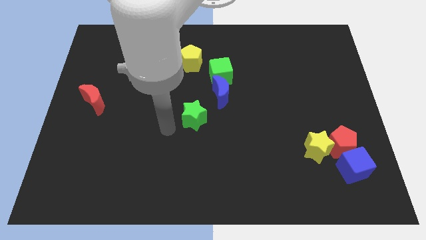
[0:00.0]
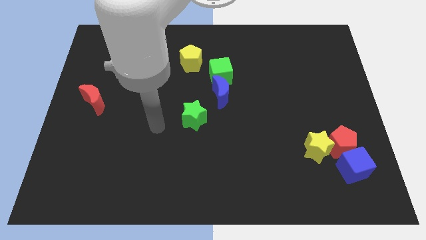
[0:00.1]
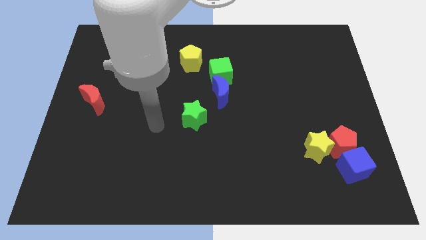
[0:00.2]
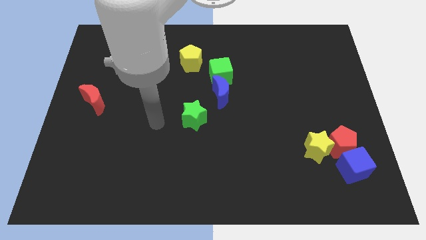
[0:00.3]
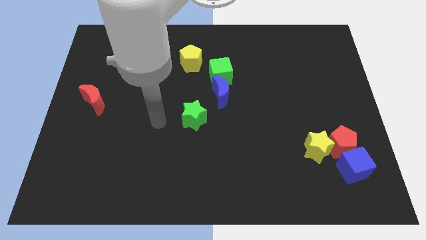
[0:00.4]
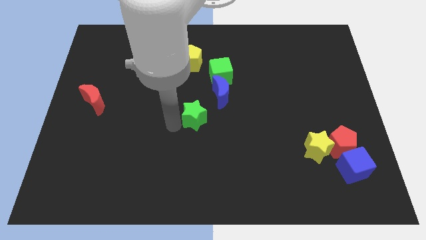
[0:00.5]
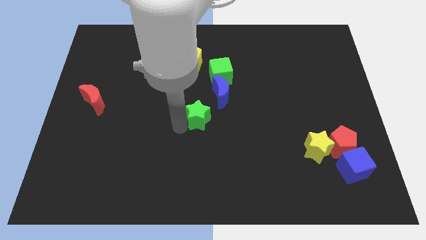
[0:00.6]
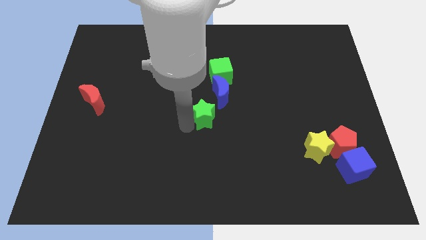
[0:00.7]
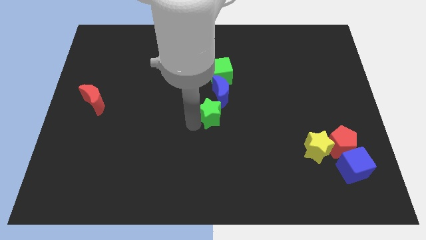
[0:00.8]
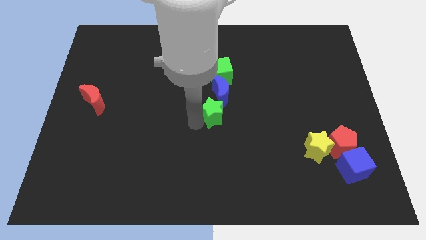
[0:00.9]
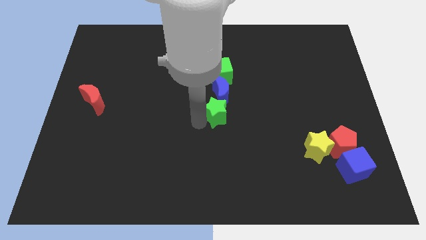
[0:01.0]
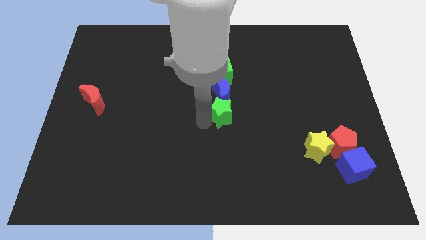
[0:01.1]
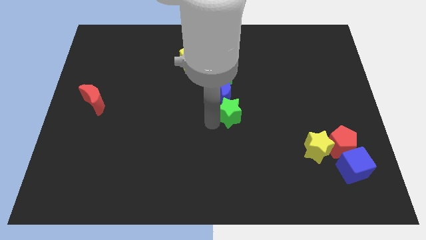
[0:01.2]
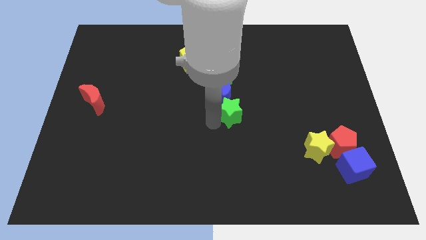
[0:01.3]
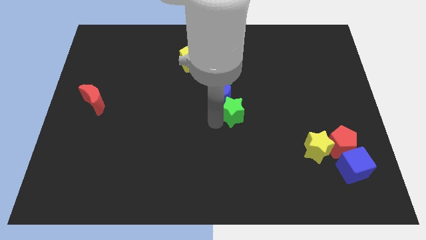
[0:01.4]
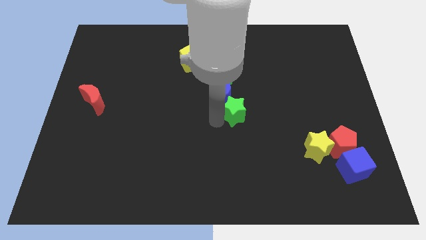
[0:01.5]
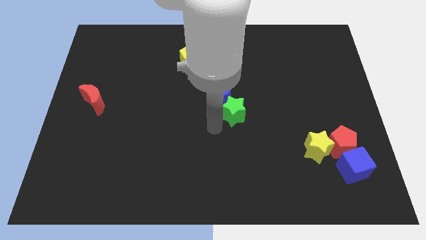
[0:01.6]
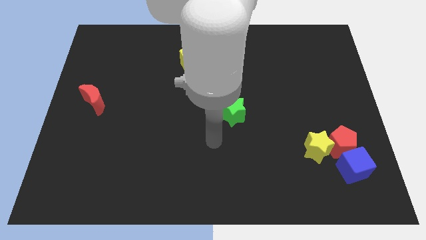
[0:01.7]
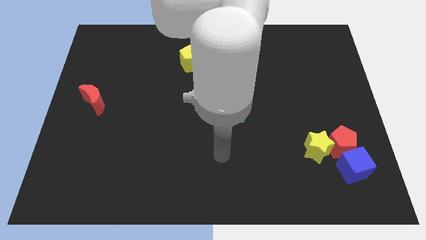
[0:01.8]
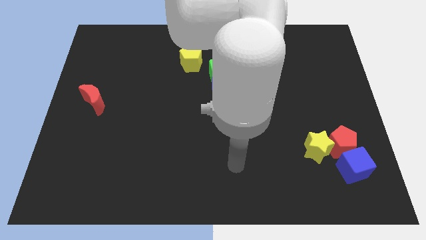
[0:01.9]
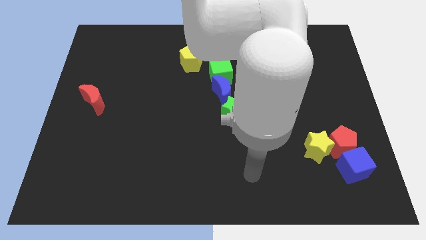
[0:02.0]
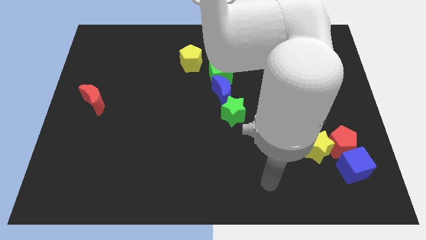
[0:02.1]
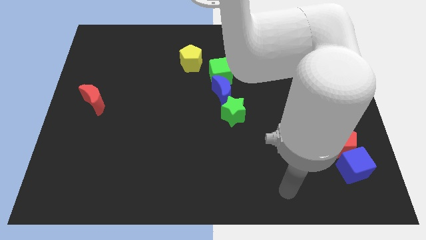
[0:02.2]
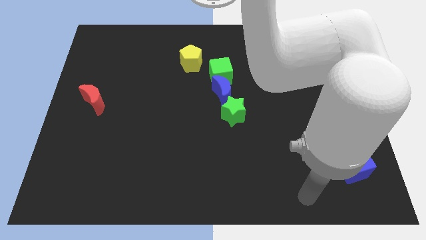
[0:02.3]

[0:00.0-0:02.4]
place the green star to the bottom of blue moon

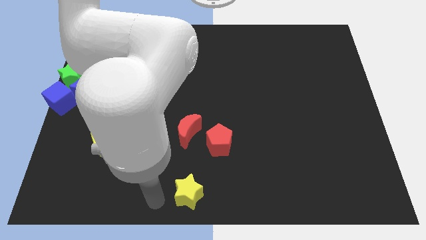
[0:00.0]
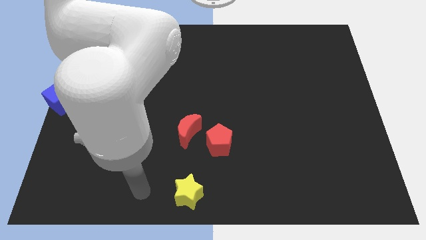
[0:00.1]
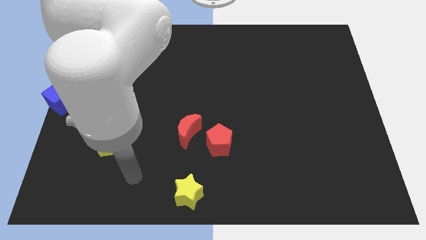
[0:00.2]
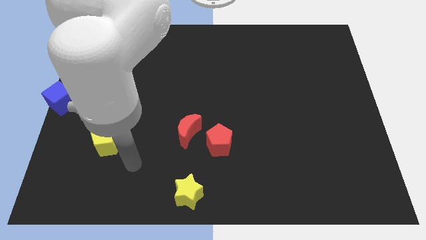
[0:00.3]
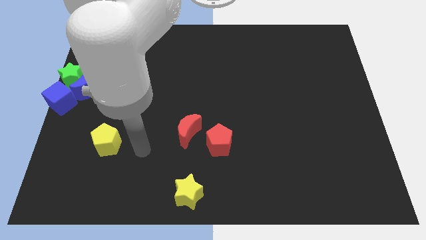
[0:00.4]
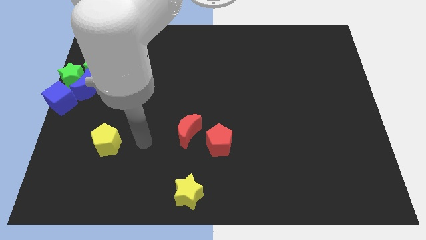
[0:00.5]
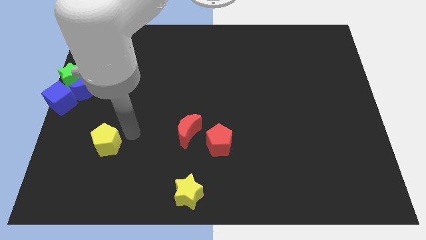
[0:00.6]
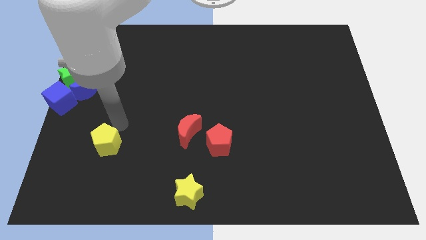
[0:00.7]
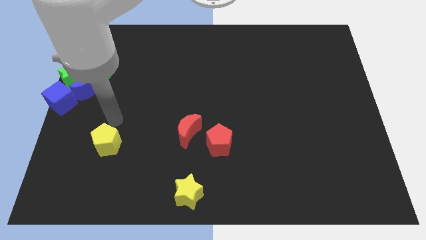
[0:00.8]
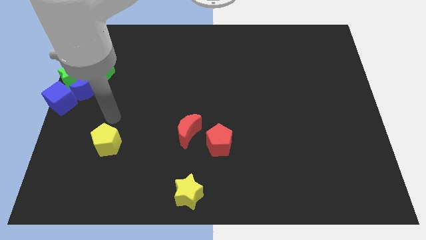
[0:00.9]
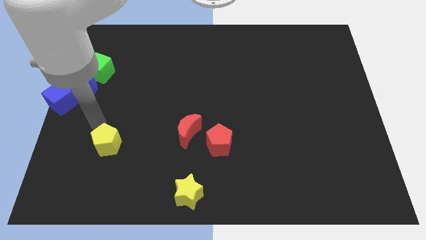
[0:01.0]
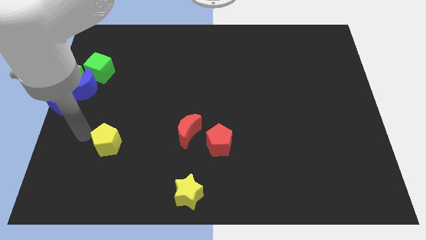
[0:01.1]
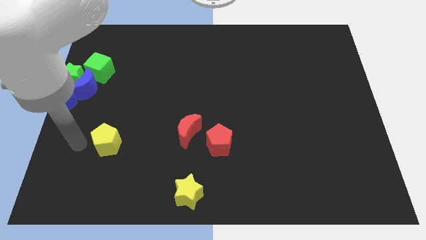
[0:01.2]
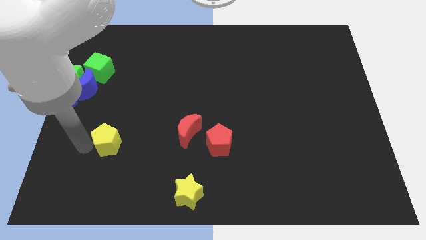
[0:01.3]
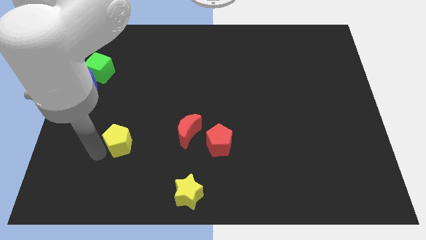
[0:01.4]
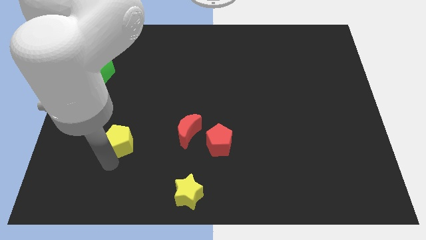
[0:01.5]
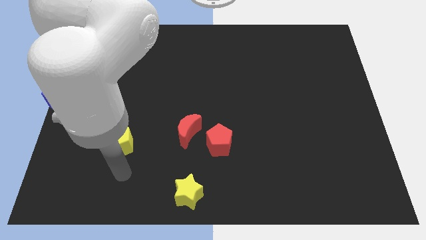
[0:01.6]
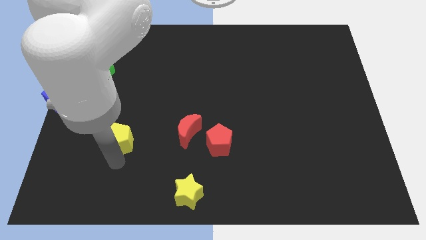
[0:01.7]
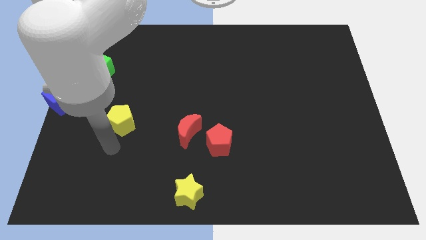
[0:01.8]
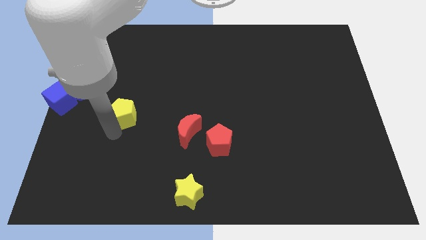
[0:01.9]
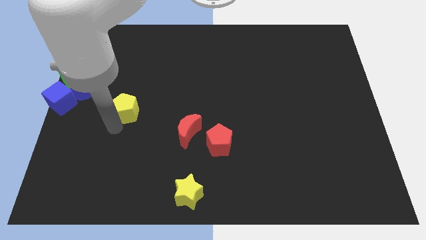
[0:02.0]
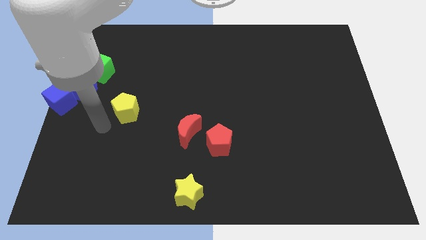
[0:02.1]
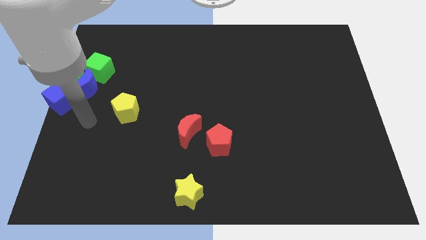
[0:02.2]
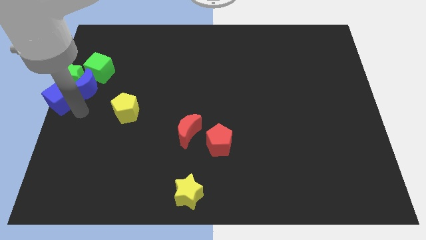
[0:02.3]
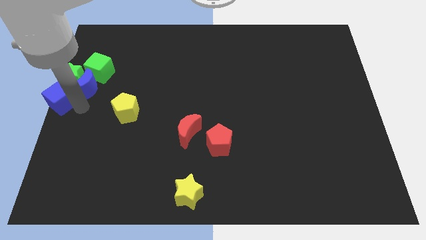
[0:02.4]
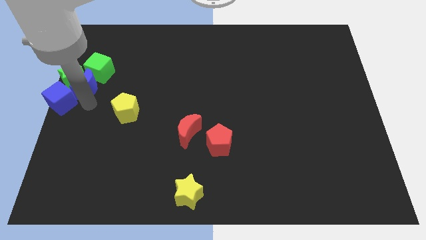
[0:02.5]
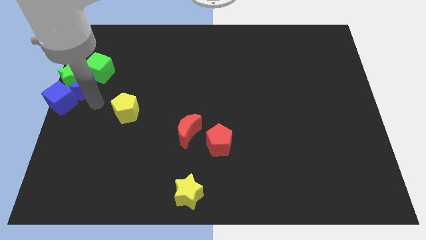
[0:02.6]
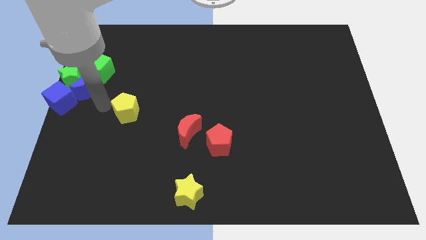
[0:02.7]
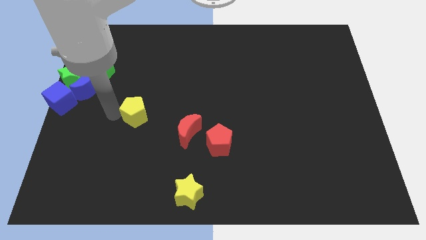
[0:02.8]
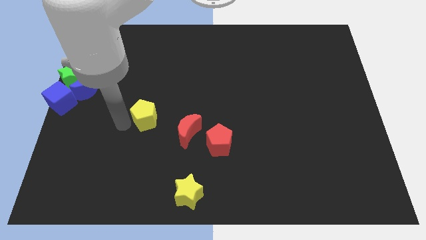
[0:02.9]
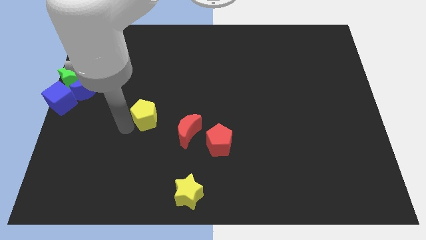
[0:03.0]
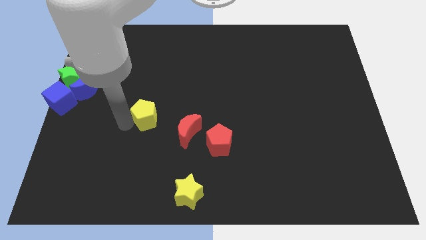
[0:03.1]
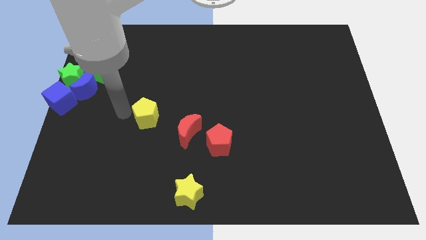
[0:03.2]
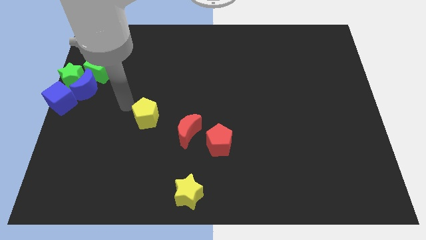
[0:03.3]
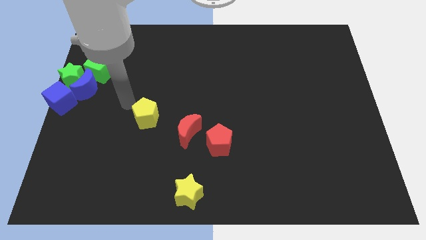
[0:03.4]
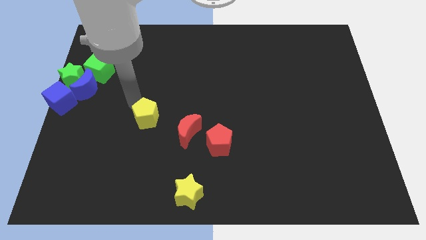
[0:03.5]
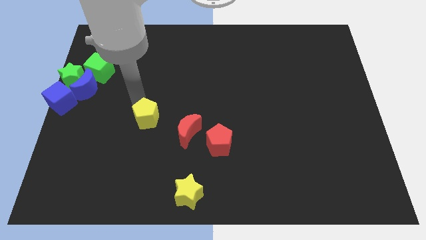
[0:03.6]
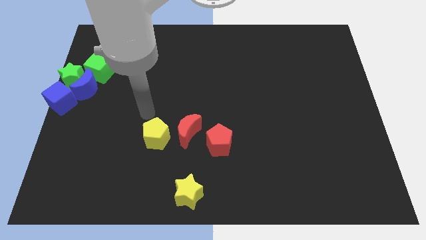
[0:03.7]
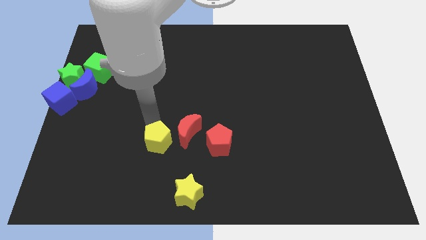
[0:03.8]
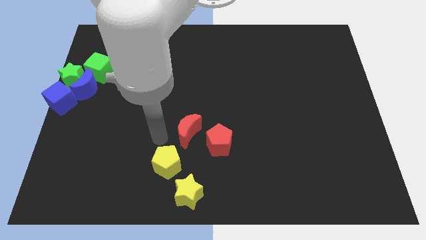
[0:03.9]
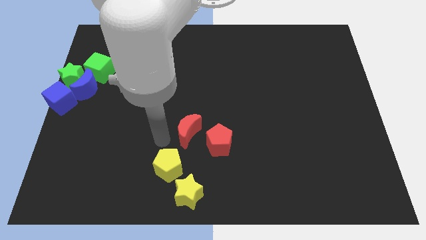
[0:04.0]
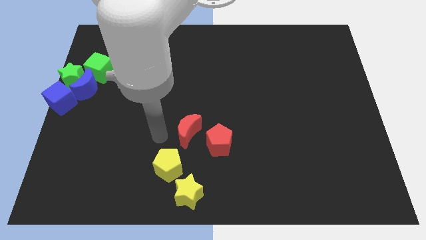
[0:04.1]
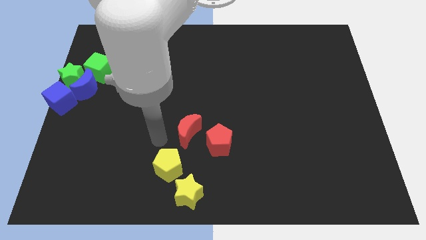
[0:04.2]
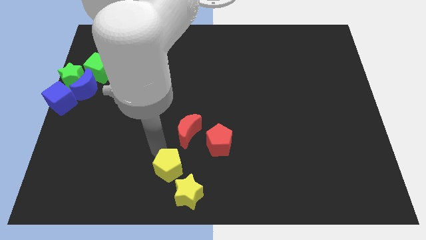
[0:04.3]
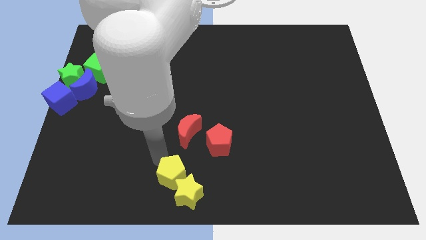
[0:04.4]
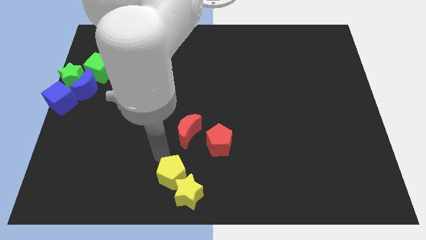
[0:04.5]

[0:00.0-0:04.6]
push the yellow pentagon to the top left side of the yellow star

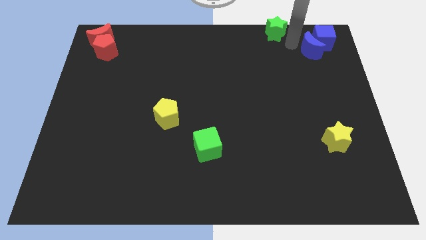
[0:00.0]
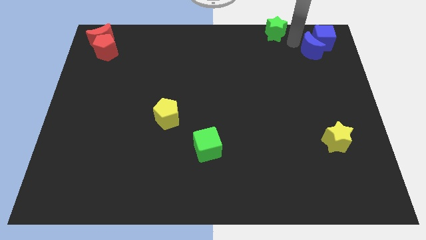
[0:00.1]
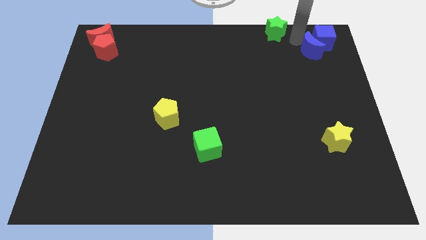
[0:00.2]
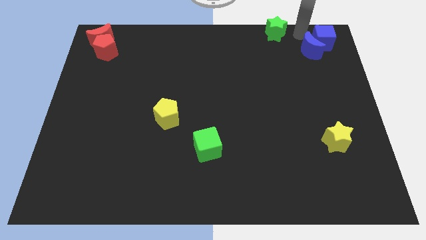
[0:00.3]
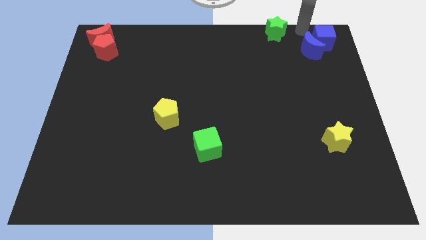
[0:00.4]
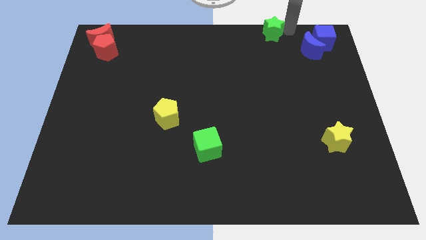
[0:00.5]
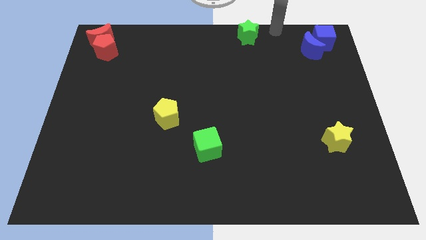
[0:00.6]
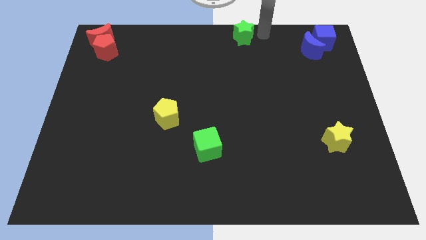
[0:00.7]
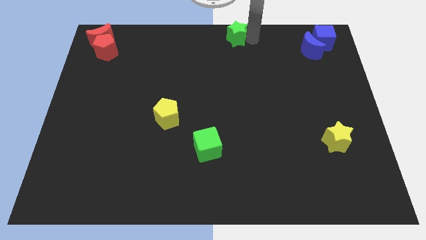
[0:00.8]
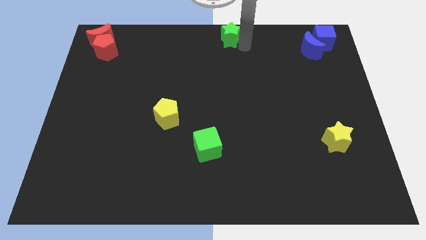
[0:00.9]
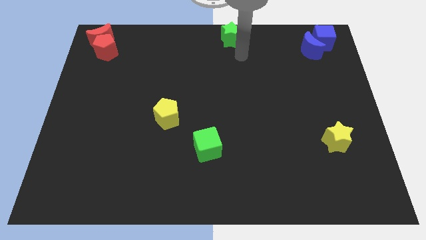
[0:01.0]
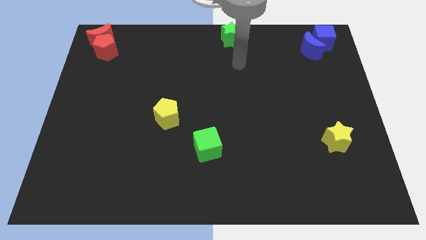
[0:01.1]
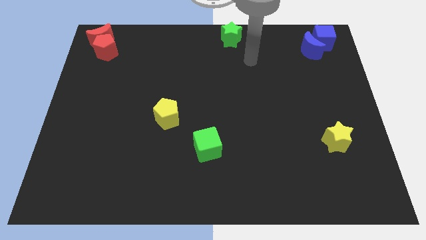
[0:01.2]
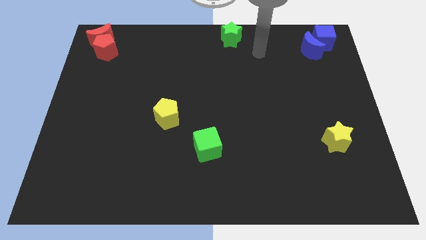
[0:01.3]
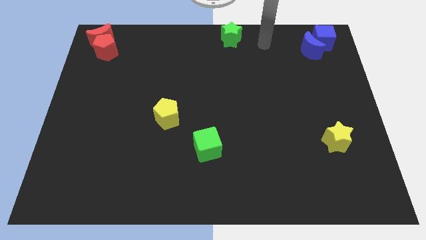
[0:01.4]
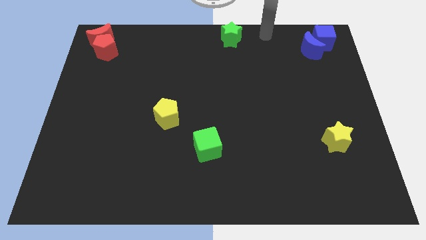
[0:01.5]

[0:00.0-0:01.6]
push the green star to its left

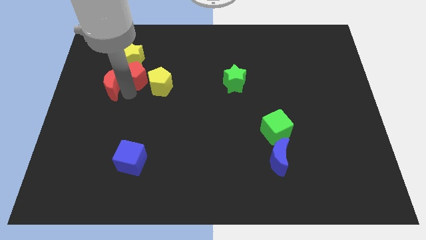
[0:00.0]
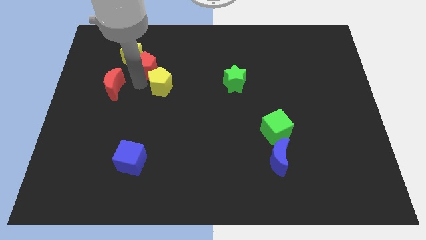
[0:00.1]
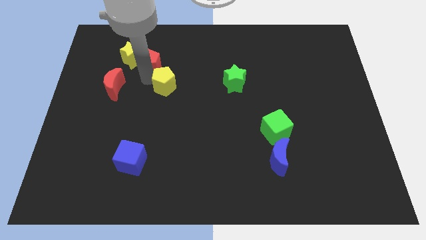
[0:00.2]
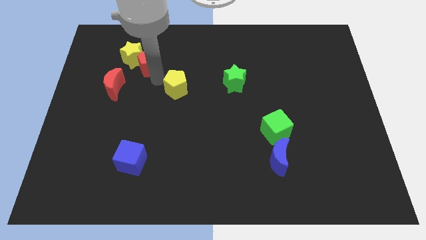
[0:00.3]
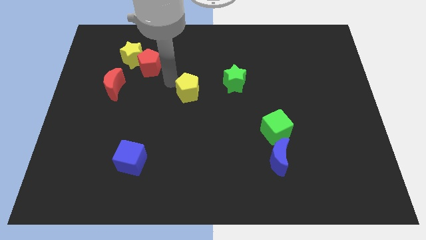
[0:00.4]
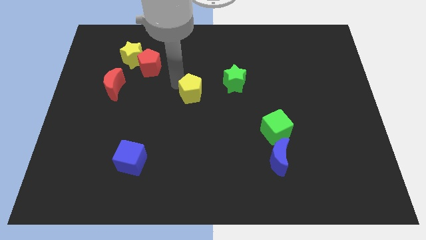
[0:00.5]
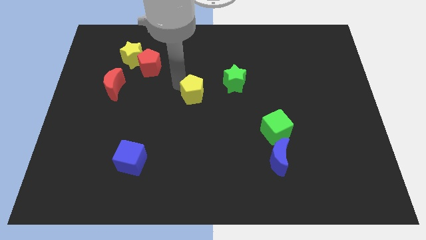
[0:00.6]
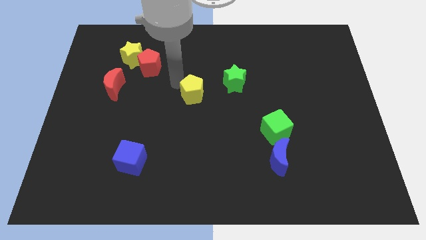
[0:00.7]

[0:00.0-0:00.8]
separate red pentagon and yellow pentagon
